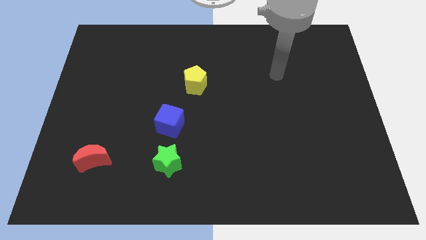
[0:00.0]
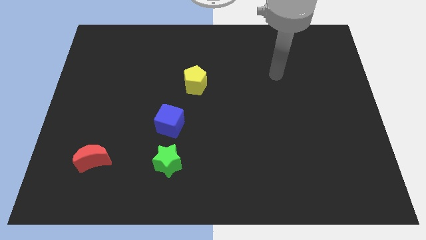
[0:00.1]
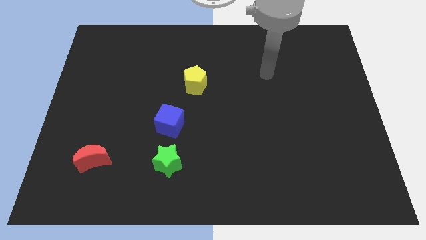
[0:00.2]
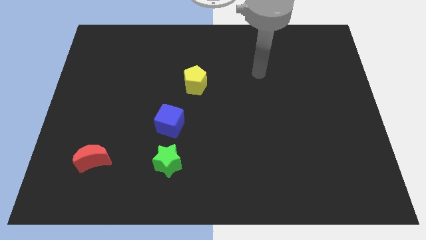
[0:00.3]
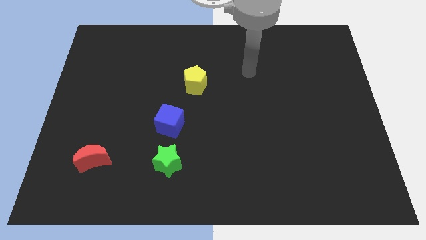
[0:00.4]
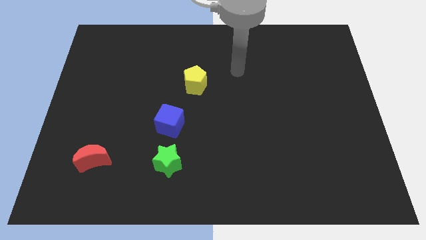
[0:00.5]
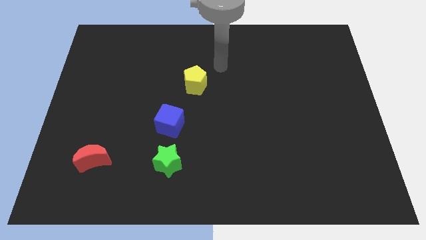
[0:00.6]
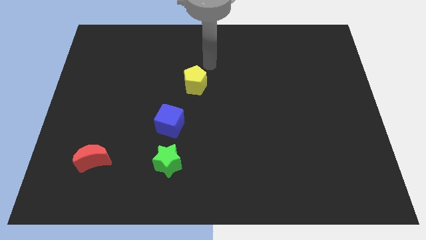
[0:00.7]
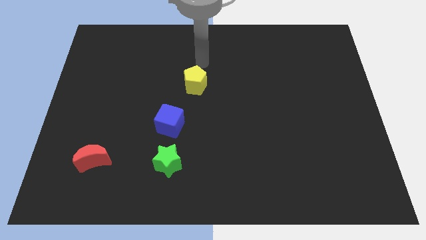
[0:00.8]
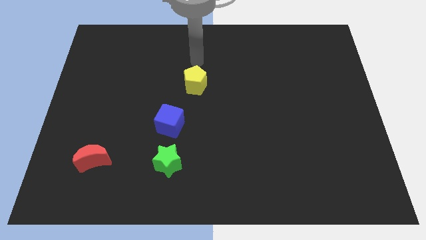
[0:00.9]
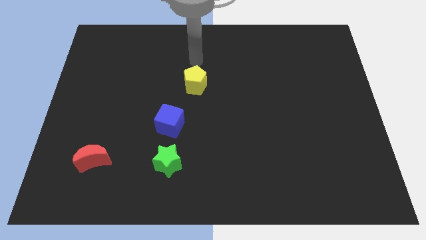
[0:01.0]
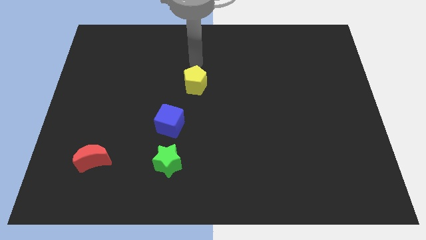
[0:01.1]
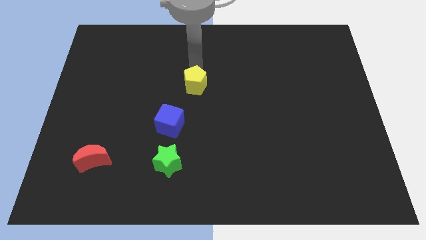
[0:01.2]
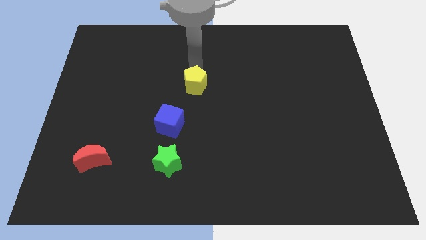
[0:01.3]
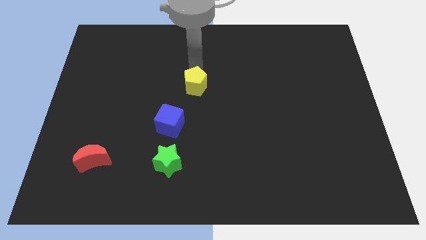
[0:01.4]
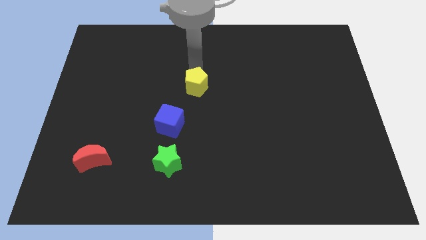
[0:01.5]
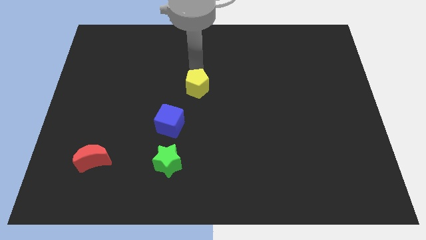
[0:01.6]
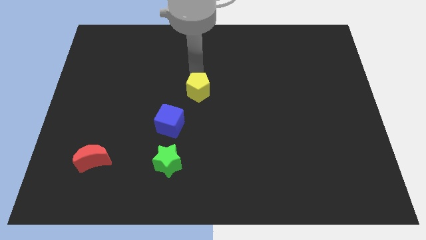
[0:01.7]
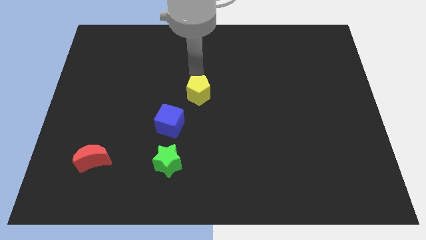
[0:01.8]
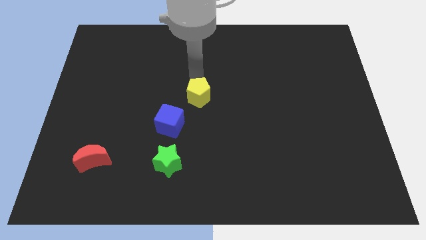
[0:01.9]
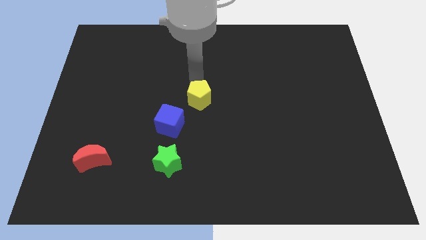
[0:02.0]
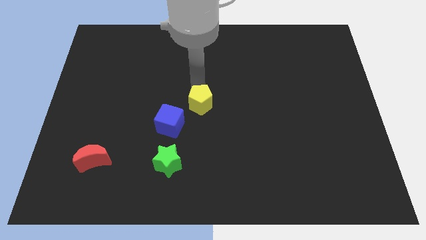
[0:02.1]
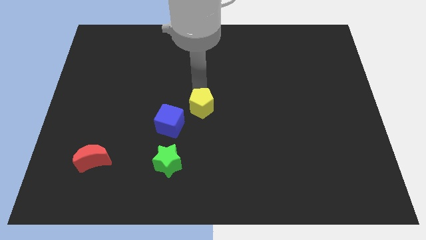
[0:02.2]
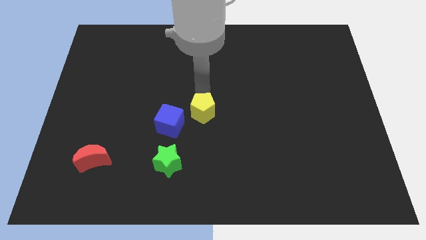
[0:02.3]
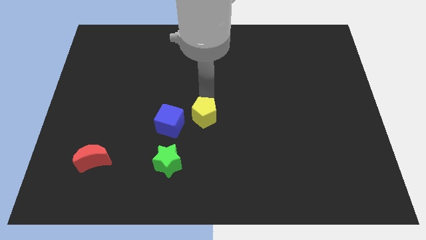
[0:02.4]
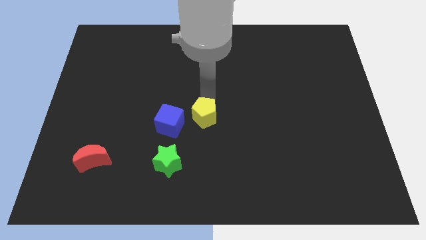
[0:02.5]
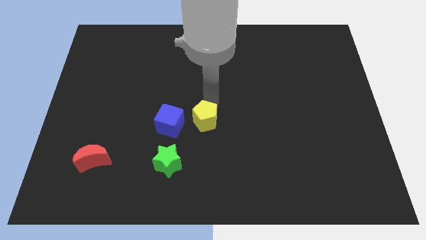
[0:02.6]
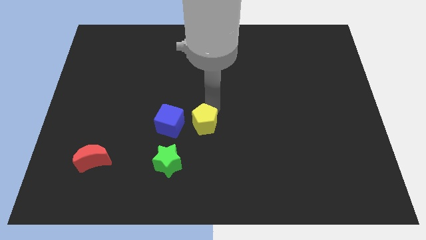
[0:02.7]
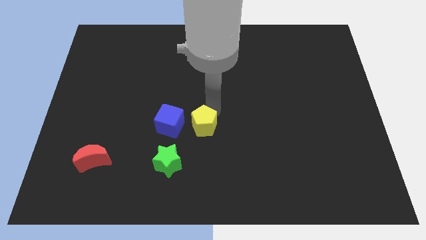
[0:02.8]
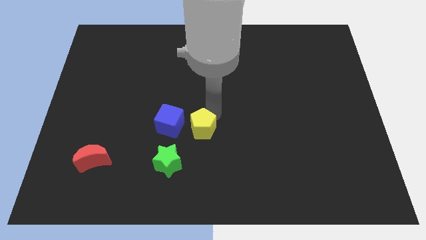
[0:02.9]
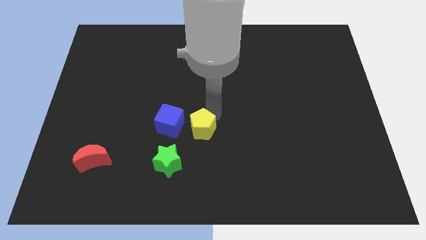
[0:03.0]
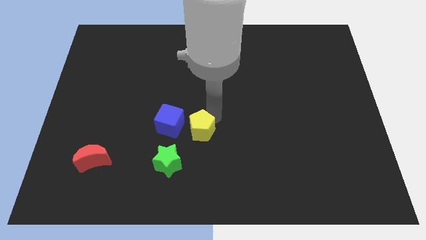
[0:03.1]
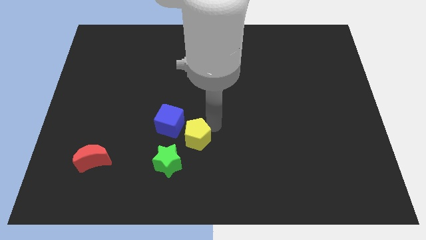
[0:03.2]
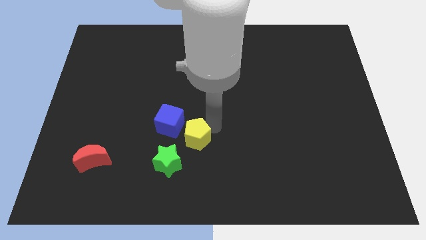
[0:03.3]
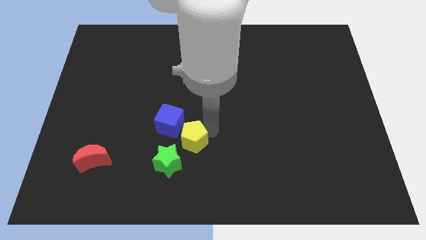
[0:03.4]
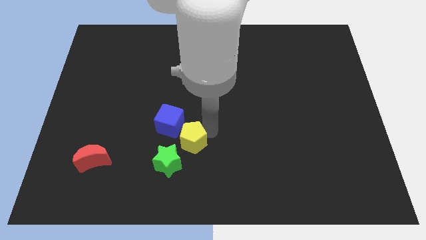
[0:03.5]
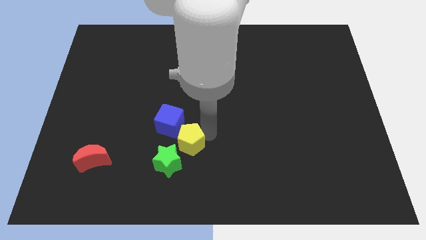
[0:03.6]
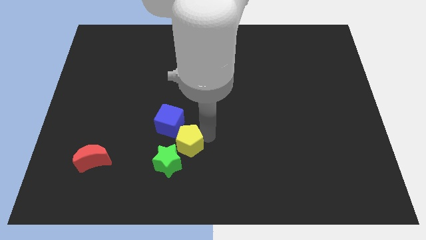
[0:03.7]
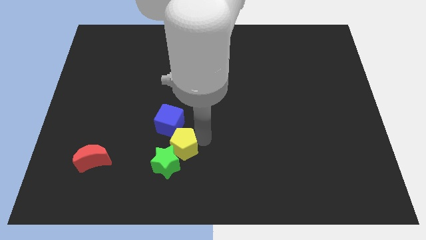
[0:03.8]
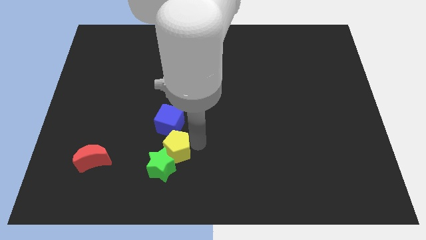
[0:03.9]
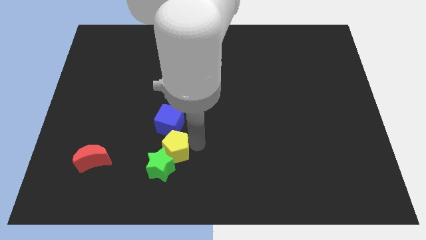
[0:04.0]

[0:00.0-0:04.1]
slide the yellow block to the star

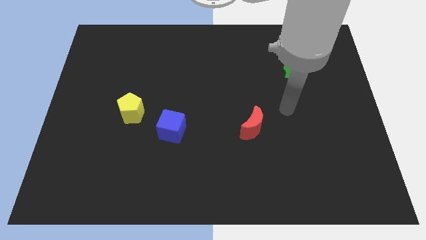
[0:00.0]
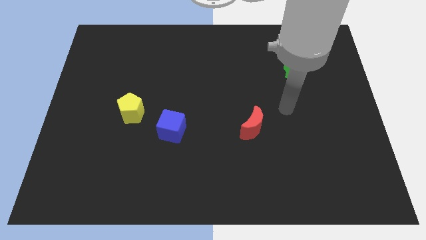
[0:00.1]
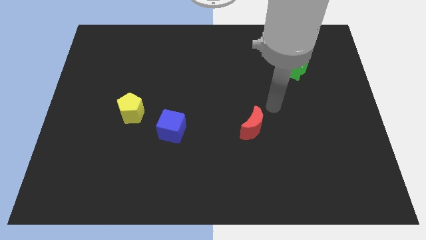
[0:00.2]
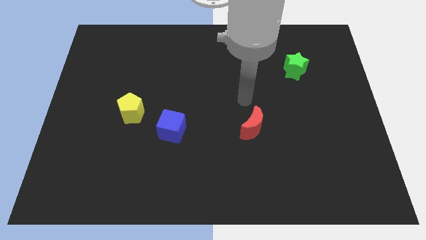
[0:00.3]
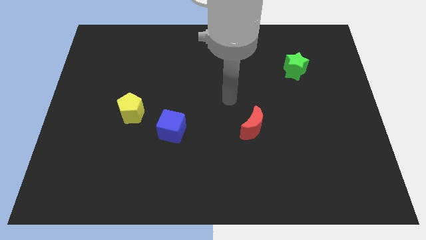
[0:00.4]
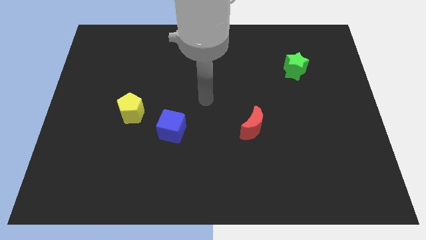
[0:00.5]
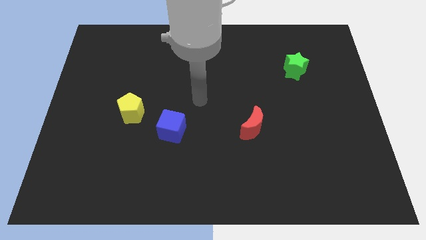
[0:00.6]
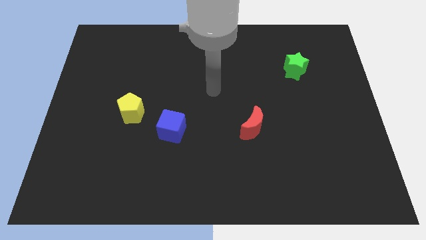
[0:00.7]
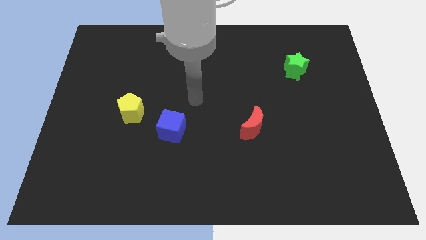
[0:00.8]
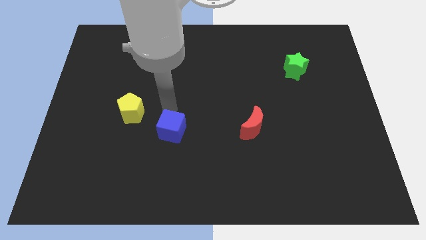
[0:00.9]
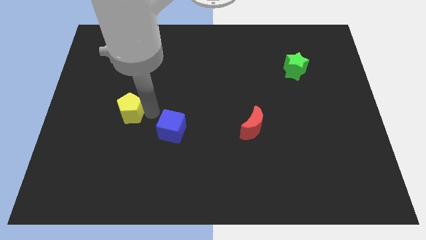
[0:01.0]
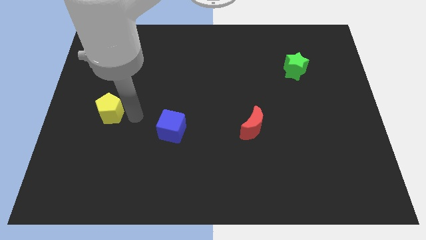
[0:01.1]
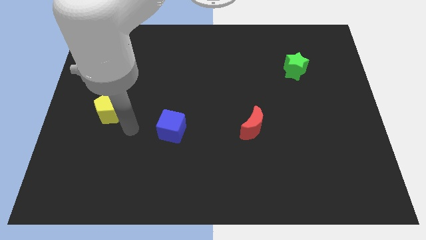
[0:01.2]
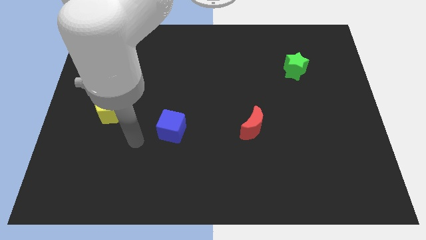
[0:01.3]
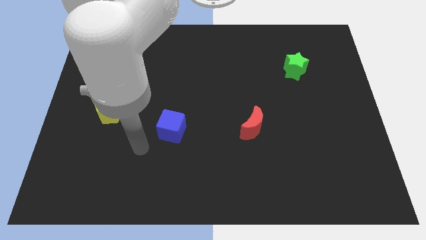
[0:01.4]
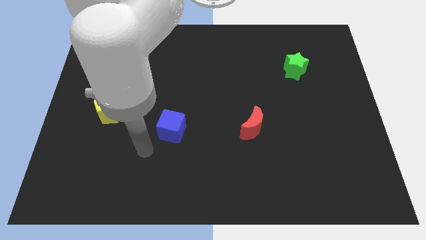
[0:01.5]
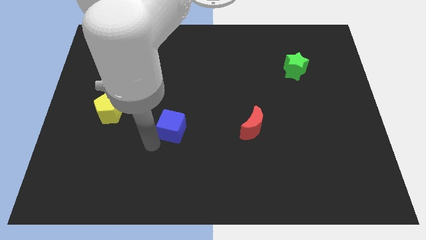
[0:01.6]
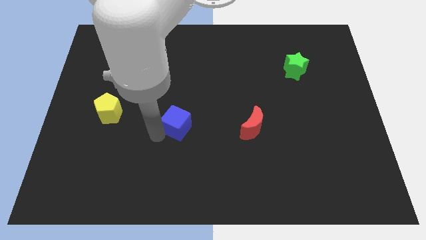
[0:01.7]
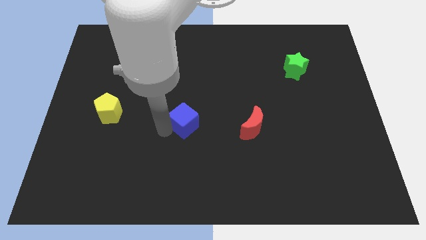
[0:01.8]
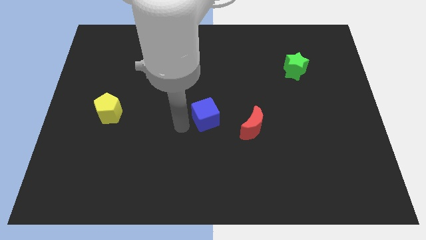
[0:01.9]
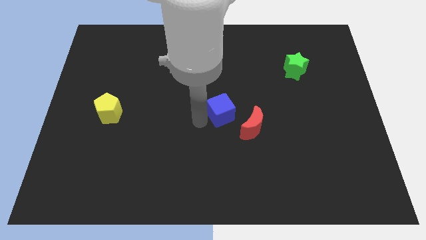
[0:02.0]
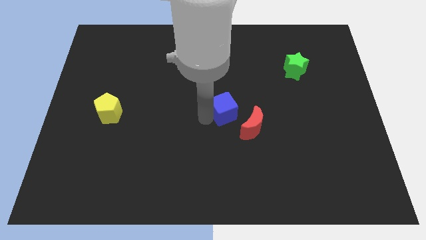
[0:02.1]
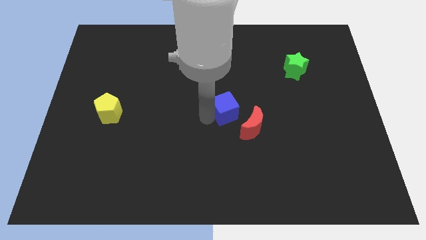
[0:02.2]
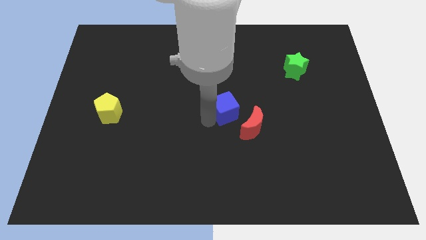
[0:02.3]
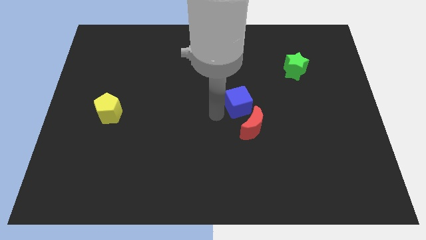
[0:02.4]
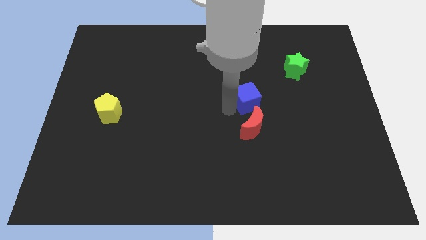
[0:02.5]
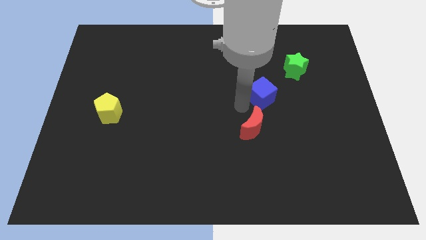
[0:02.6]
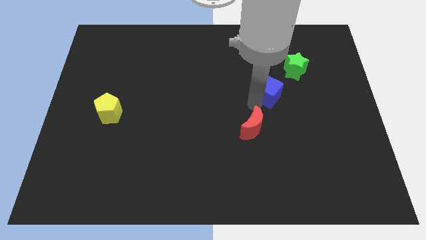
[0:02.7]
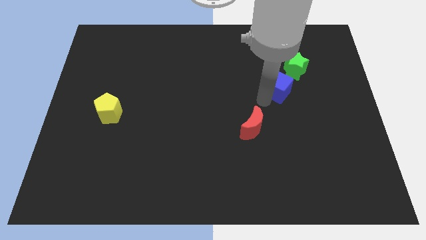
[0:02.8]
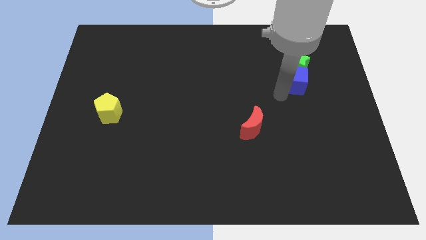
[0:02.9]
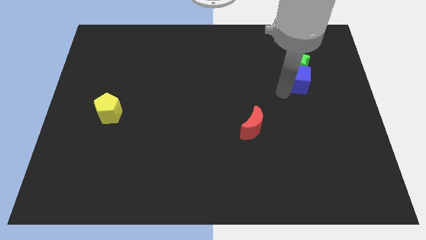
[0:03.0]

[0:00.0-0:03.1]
put the cube next to the green star

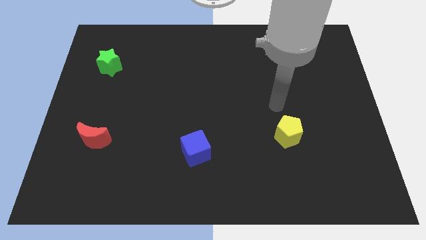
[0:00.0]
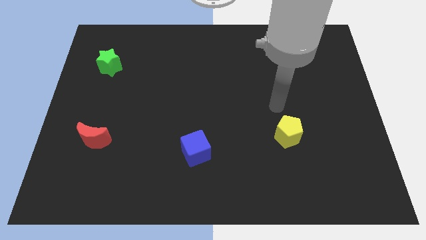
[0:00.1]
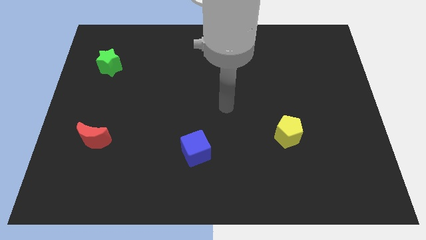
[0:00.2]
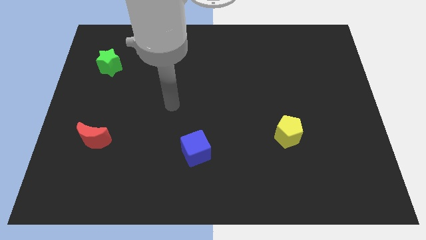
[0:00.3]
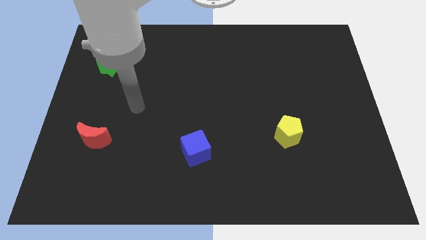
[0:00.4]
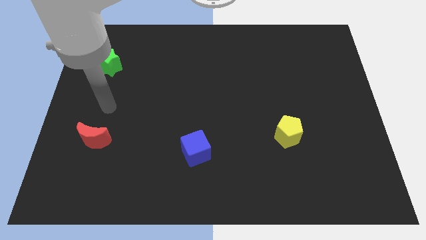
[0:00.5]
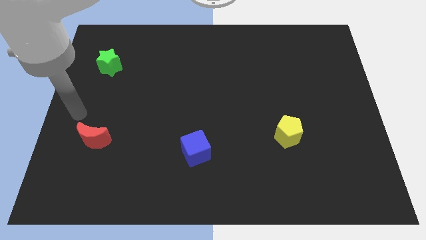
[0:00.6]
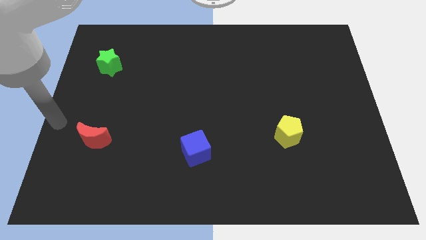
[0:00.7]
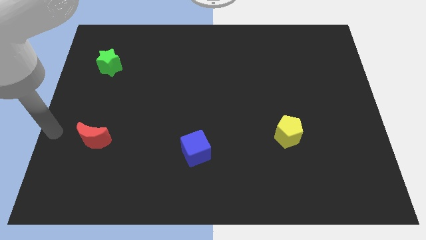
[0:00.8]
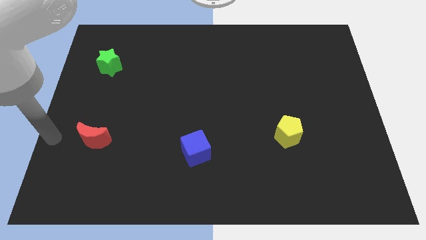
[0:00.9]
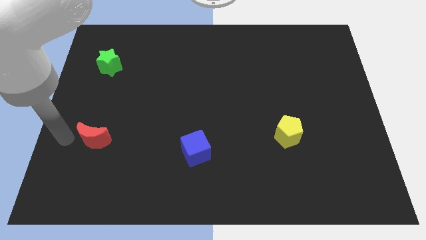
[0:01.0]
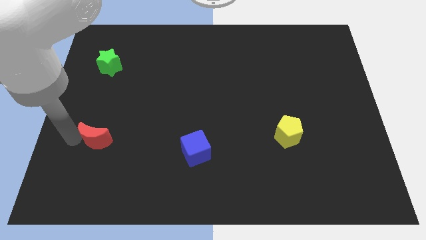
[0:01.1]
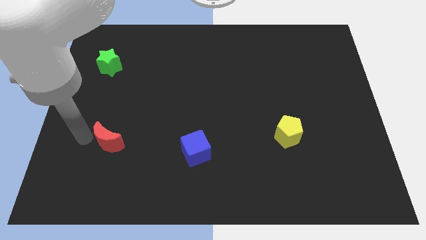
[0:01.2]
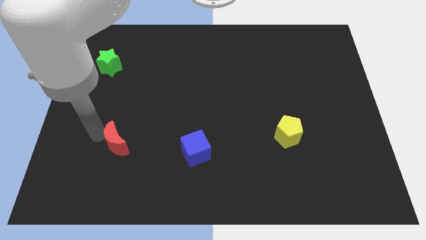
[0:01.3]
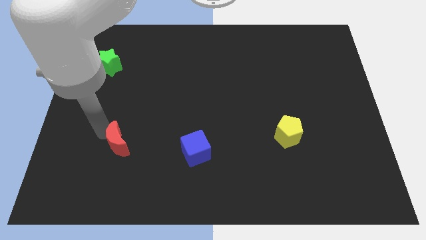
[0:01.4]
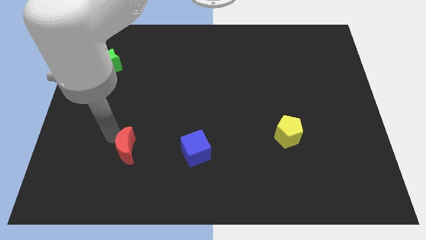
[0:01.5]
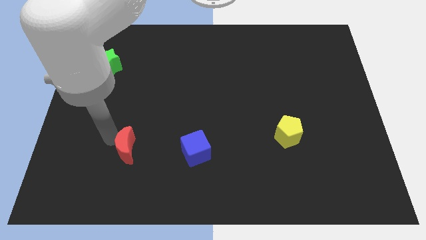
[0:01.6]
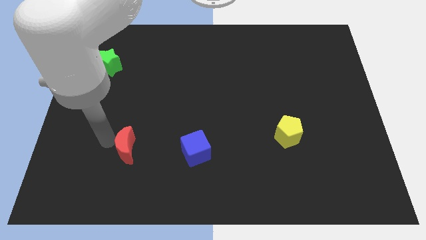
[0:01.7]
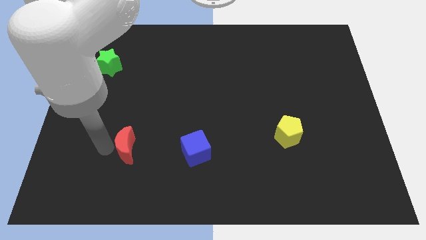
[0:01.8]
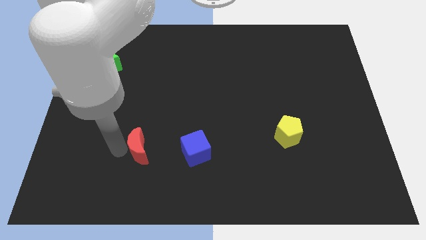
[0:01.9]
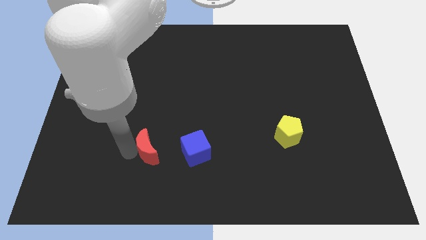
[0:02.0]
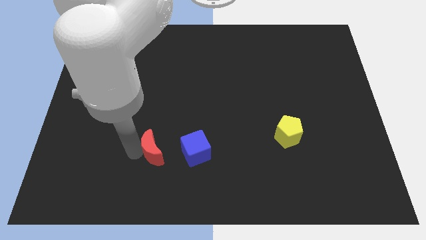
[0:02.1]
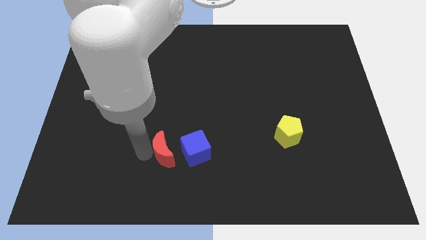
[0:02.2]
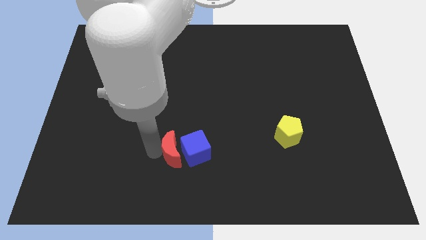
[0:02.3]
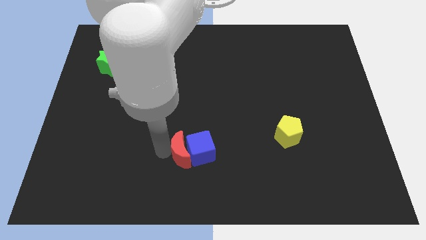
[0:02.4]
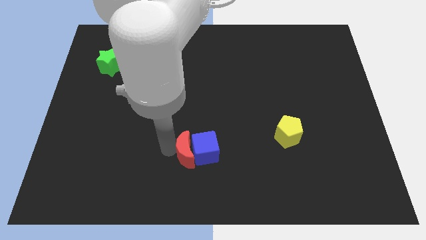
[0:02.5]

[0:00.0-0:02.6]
push the red block to the cube
